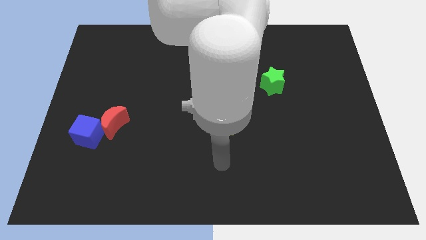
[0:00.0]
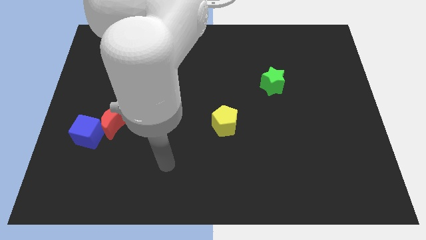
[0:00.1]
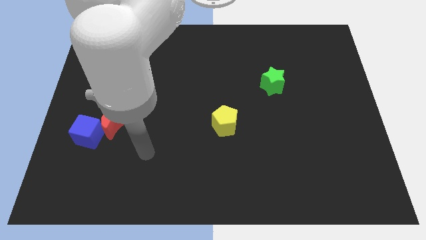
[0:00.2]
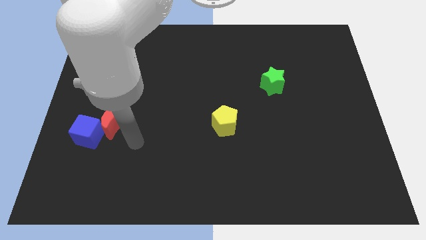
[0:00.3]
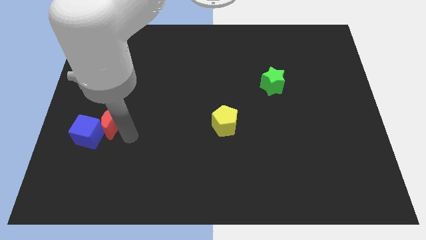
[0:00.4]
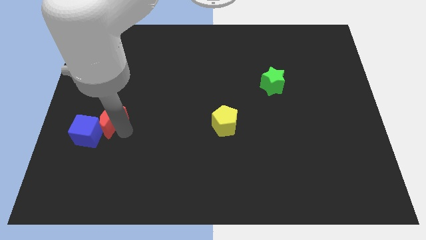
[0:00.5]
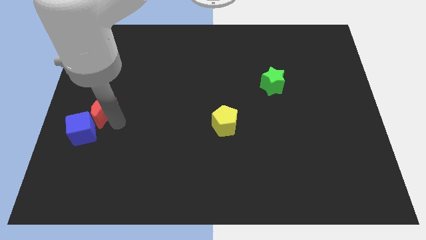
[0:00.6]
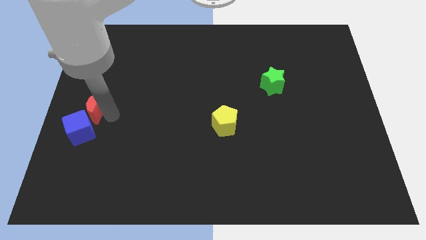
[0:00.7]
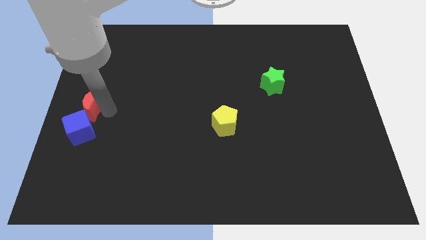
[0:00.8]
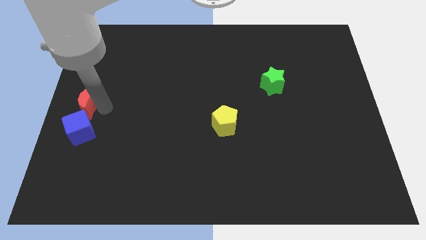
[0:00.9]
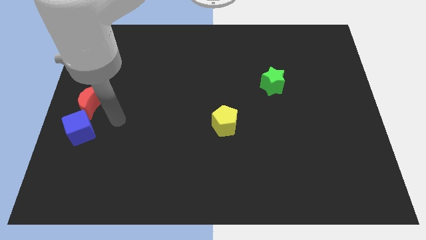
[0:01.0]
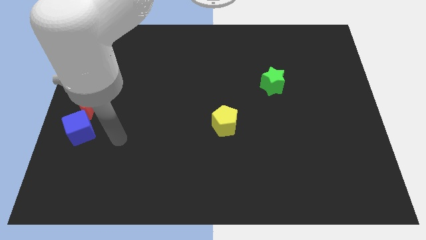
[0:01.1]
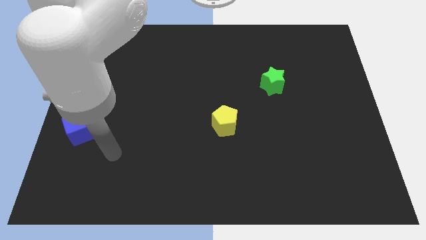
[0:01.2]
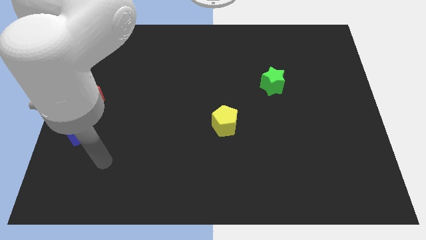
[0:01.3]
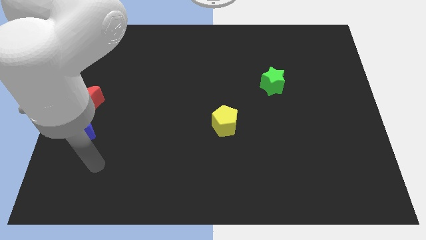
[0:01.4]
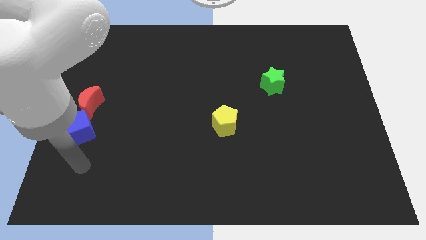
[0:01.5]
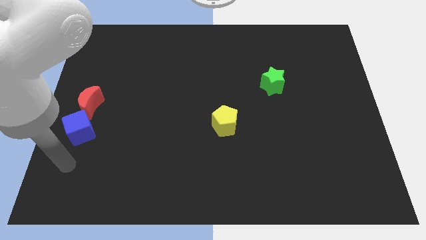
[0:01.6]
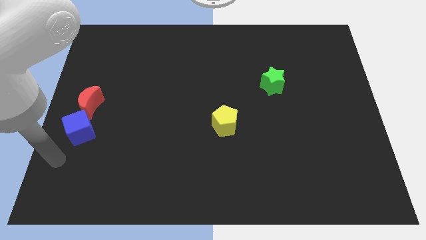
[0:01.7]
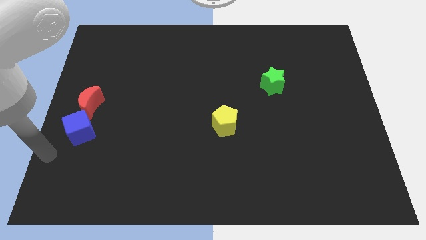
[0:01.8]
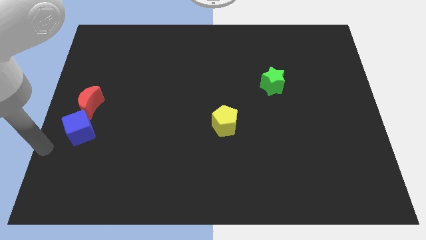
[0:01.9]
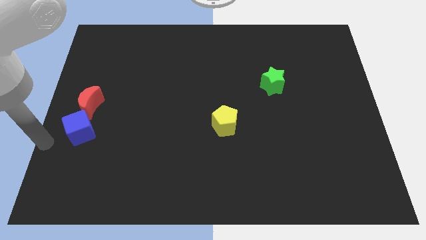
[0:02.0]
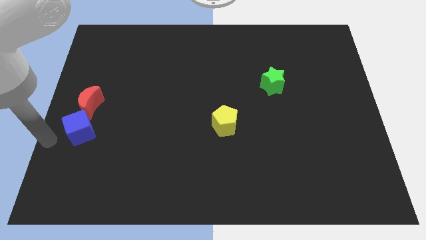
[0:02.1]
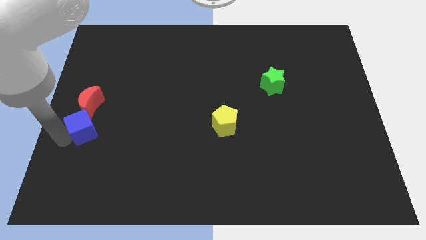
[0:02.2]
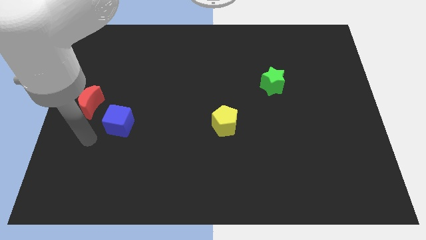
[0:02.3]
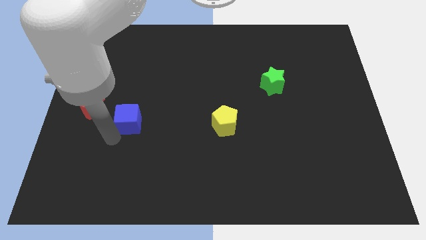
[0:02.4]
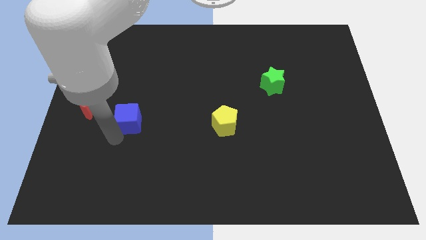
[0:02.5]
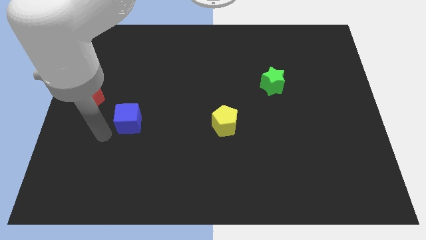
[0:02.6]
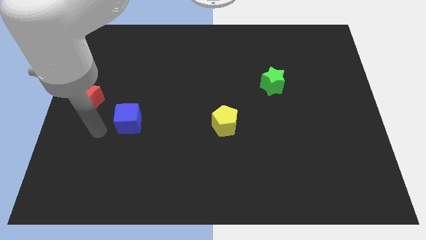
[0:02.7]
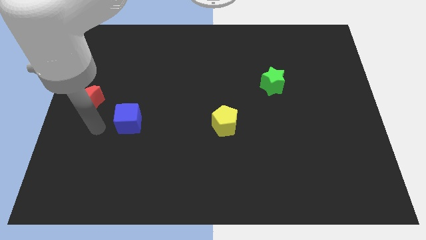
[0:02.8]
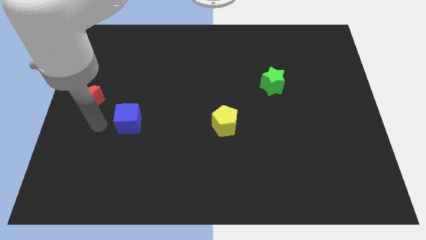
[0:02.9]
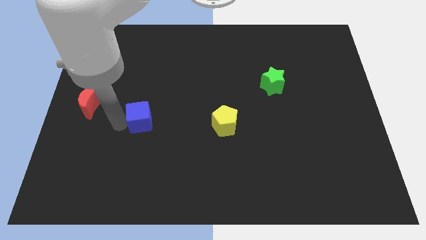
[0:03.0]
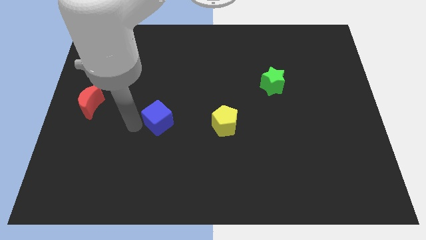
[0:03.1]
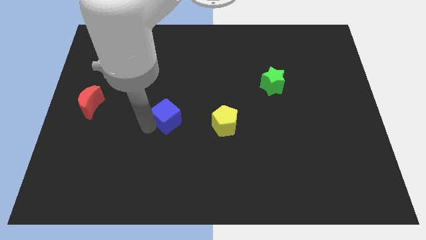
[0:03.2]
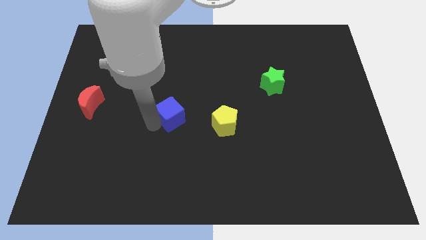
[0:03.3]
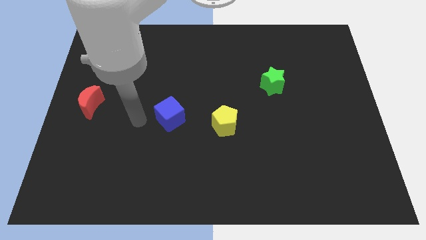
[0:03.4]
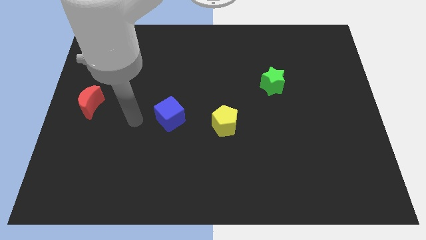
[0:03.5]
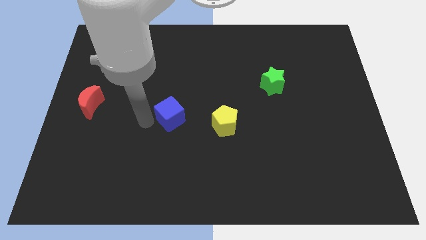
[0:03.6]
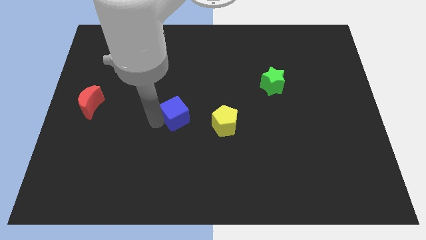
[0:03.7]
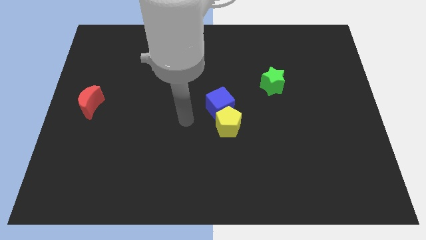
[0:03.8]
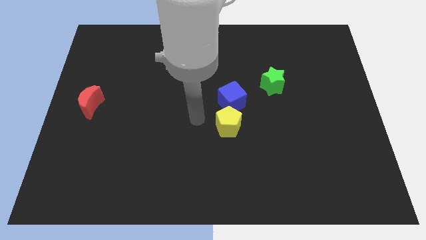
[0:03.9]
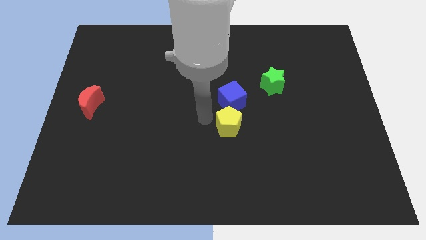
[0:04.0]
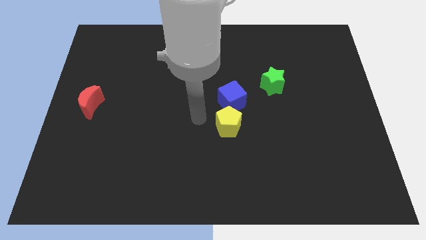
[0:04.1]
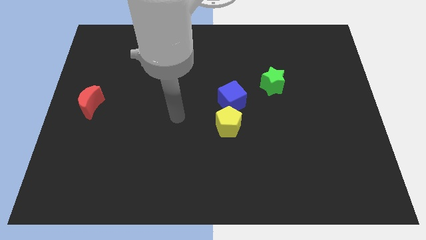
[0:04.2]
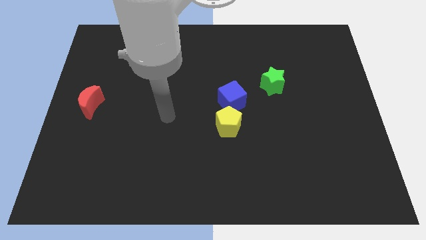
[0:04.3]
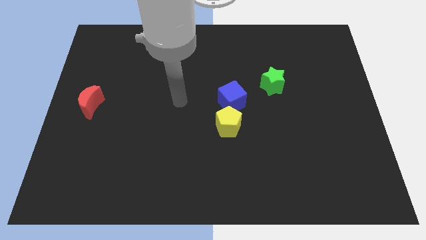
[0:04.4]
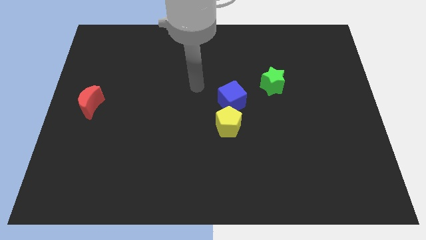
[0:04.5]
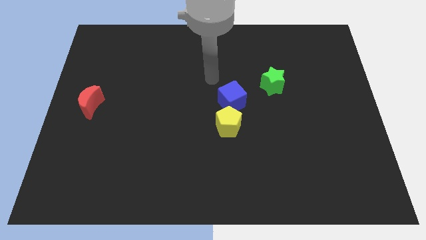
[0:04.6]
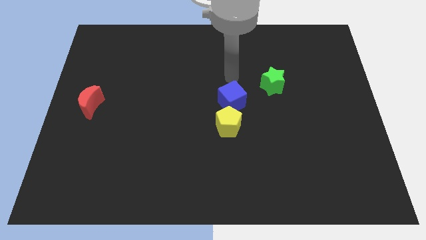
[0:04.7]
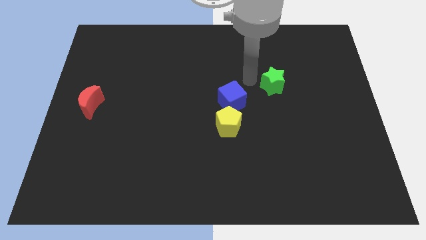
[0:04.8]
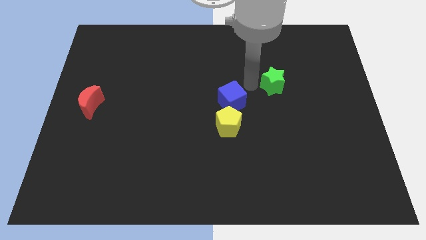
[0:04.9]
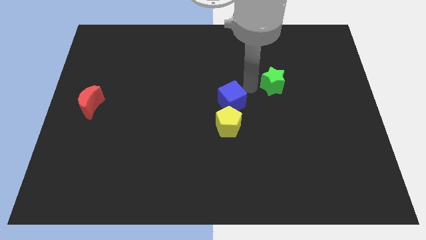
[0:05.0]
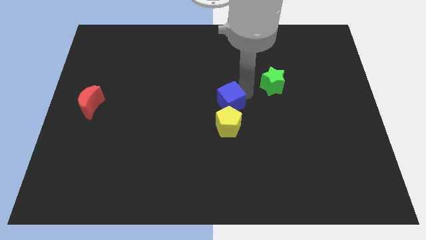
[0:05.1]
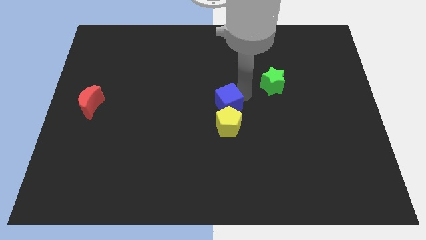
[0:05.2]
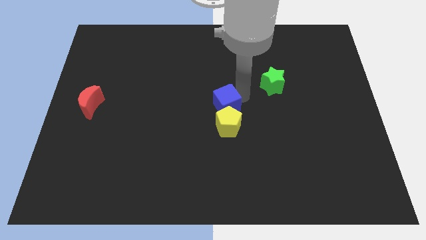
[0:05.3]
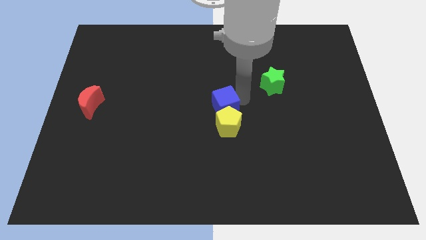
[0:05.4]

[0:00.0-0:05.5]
put the blue block to the yellow block

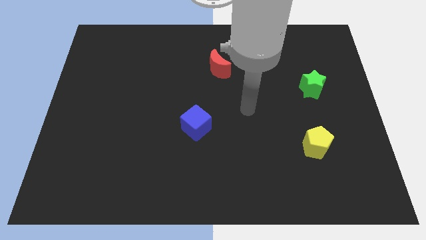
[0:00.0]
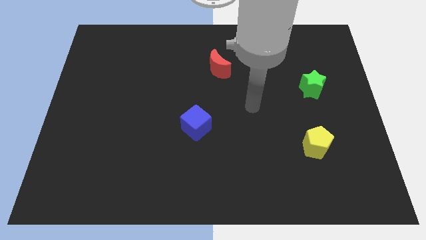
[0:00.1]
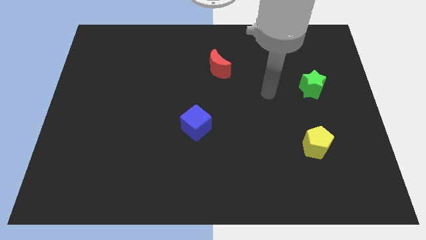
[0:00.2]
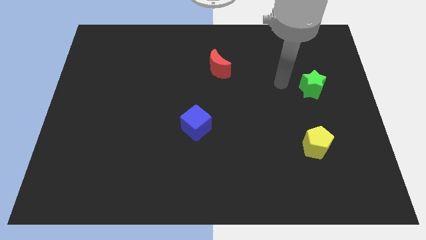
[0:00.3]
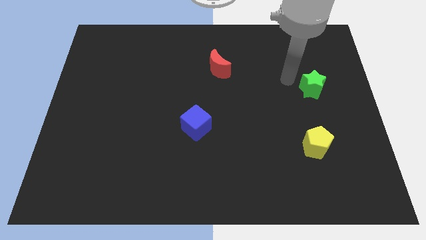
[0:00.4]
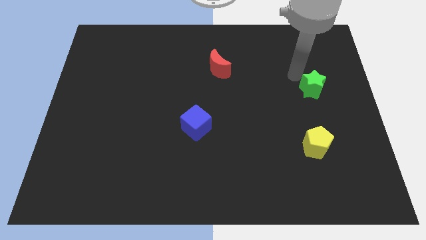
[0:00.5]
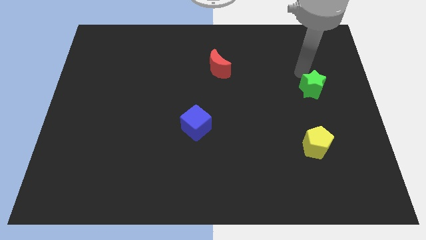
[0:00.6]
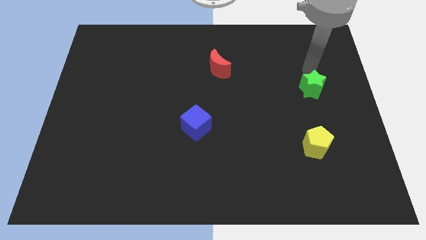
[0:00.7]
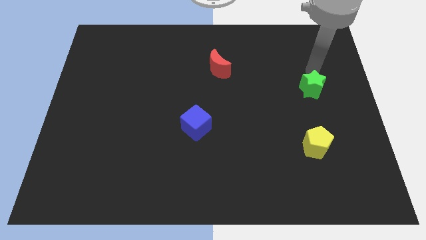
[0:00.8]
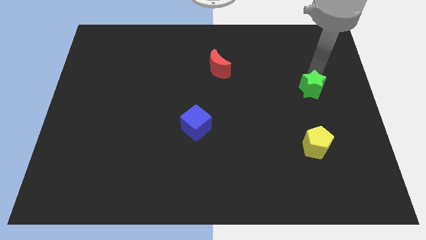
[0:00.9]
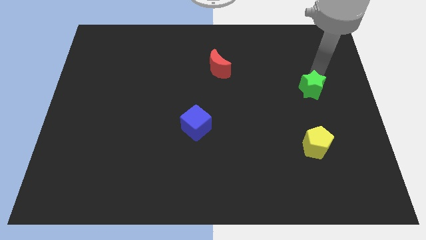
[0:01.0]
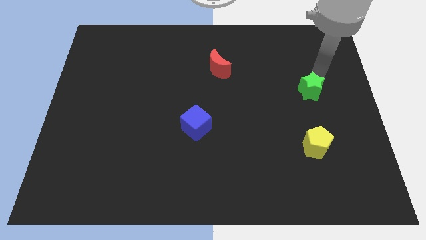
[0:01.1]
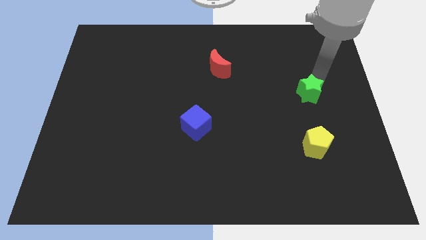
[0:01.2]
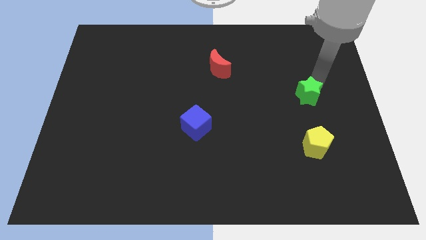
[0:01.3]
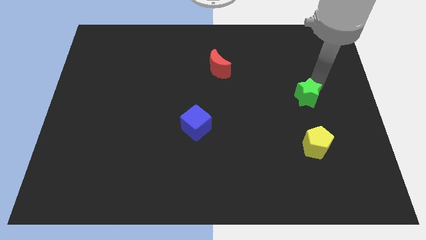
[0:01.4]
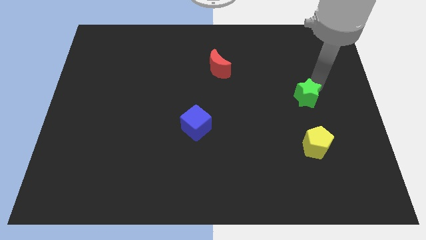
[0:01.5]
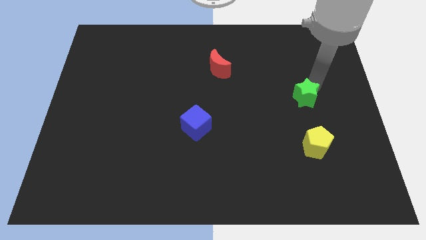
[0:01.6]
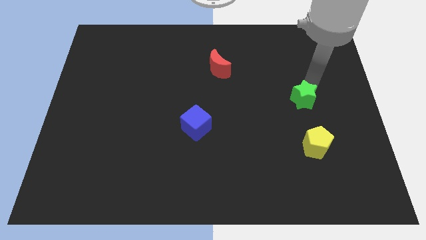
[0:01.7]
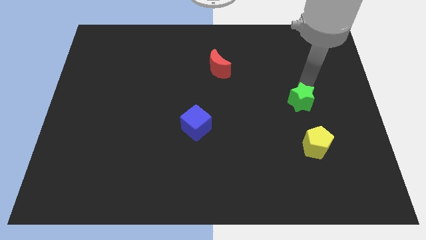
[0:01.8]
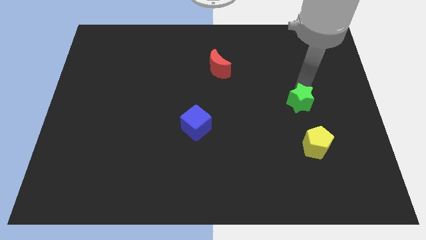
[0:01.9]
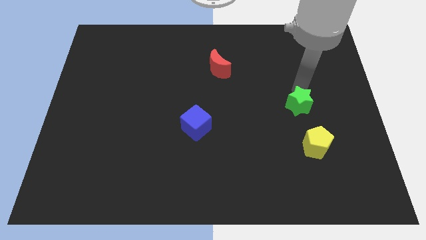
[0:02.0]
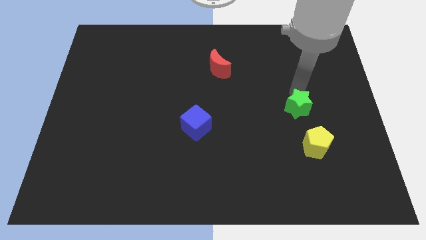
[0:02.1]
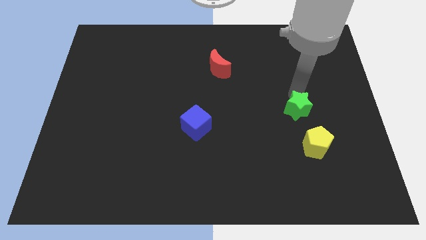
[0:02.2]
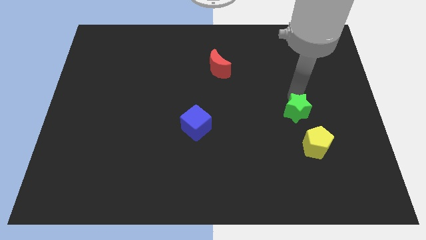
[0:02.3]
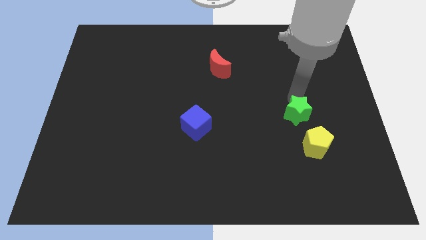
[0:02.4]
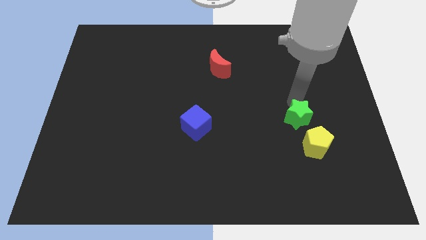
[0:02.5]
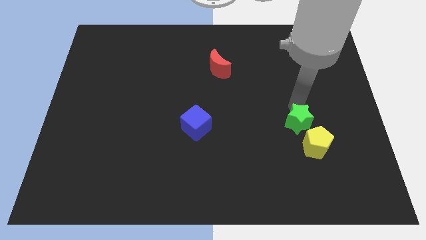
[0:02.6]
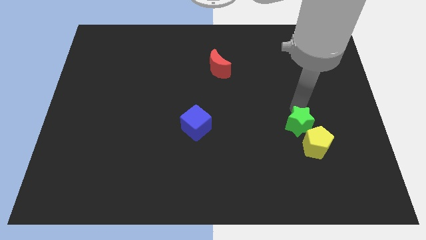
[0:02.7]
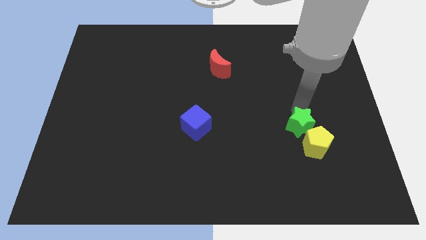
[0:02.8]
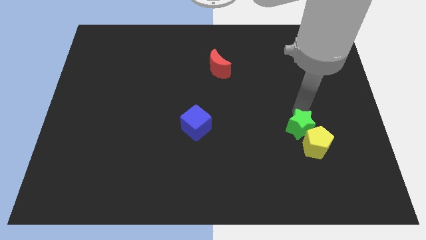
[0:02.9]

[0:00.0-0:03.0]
put the star towards the yellow pentagon
